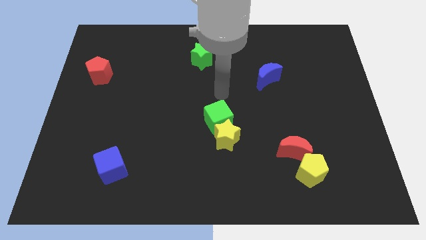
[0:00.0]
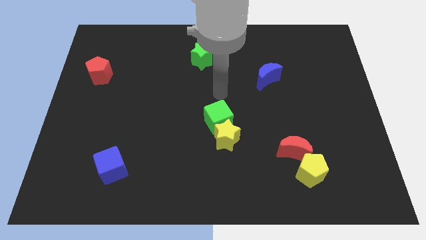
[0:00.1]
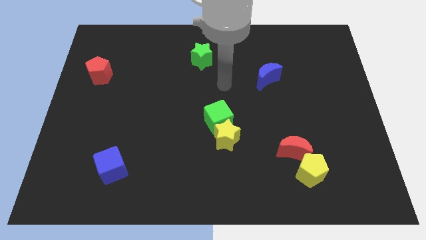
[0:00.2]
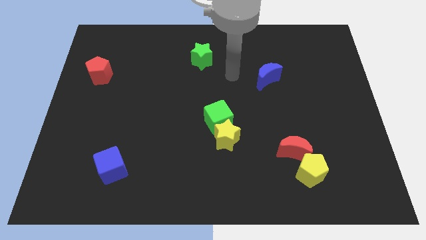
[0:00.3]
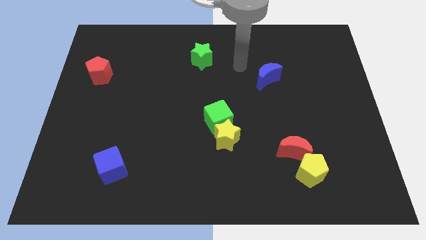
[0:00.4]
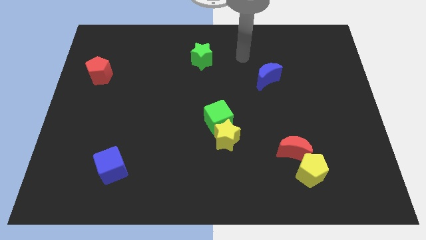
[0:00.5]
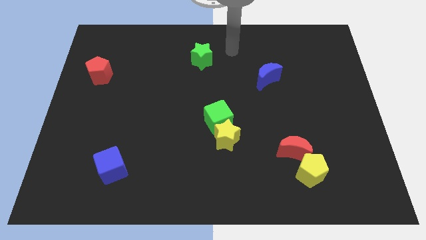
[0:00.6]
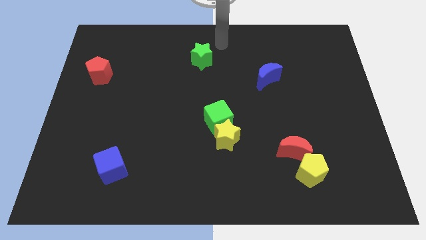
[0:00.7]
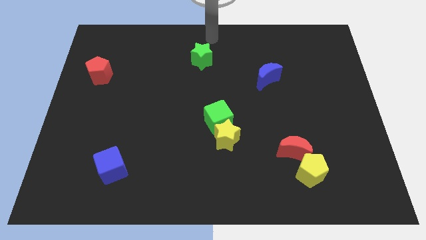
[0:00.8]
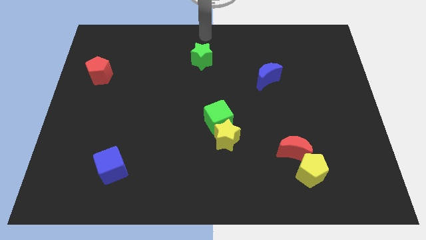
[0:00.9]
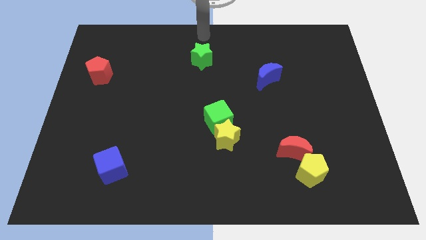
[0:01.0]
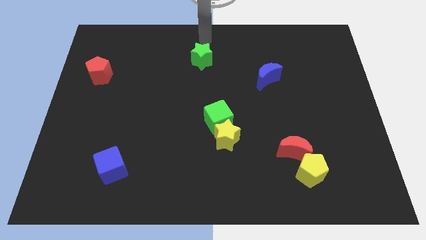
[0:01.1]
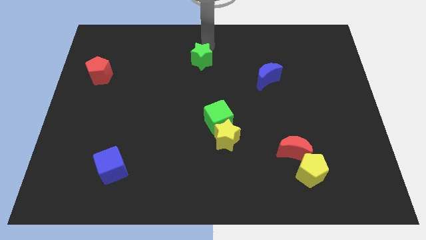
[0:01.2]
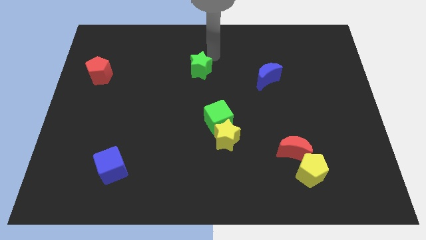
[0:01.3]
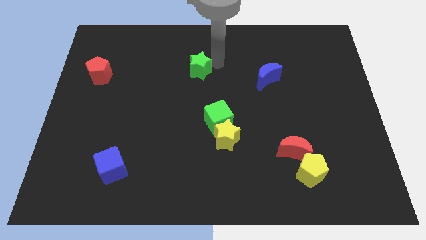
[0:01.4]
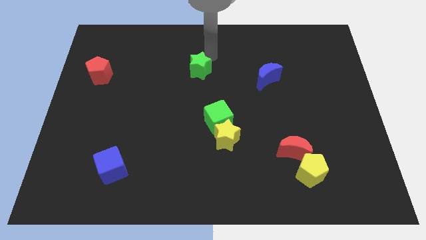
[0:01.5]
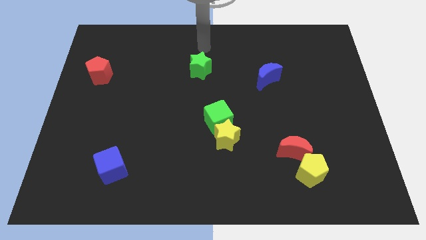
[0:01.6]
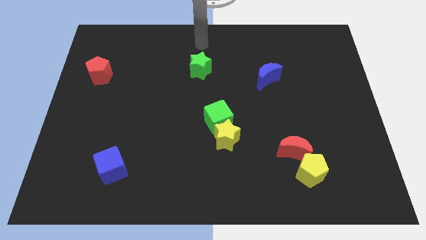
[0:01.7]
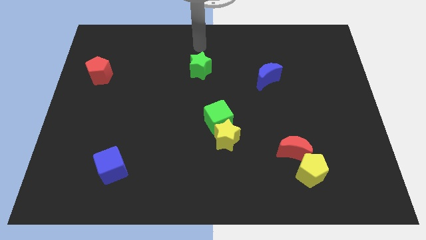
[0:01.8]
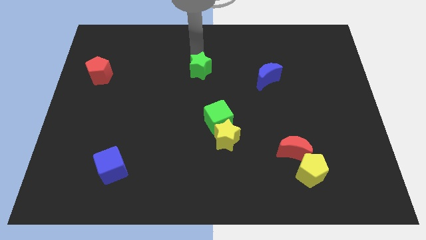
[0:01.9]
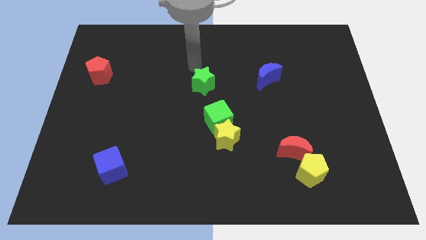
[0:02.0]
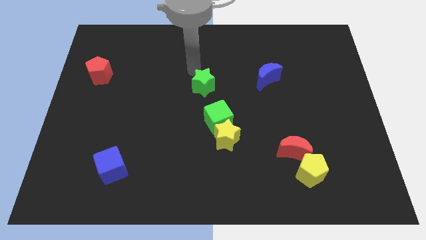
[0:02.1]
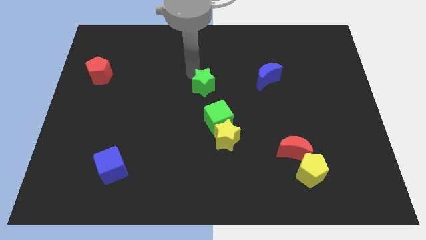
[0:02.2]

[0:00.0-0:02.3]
push the green star towards the green cube

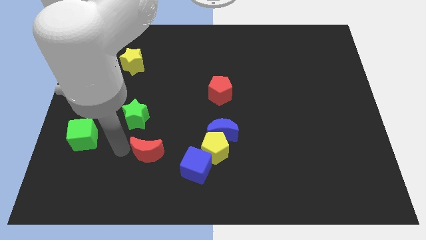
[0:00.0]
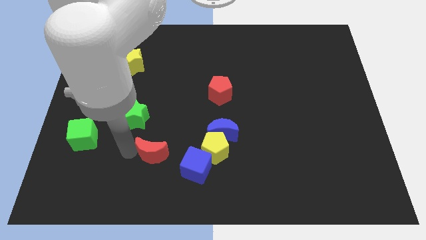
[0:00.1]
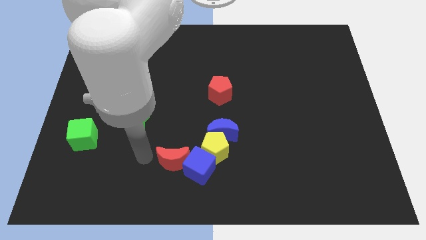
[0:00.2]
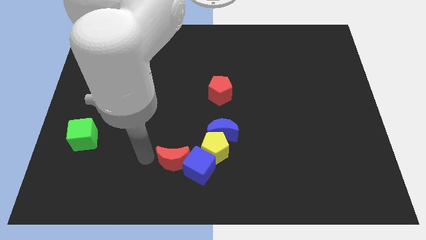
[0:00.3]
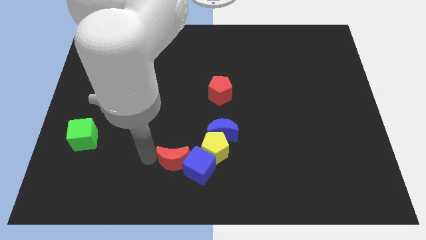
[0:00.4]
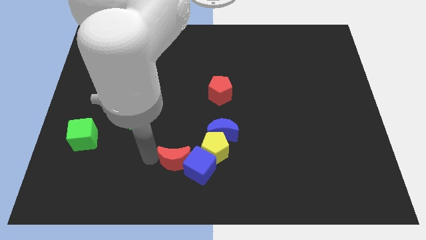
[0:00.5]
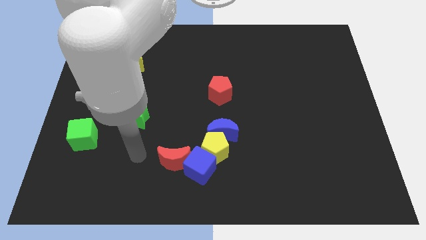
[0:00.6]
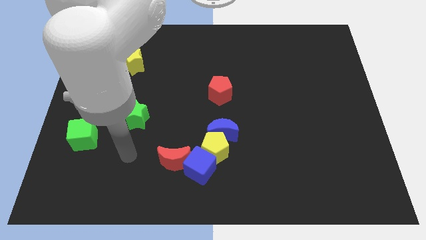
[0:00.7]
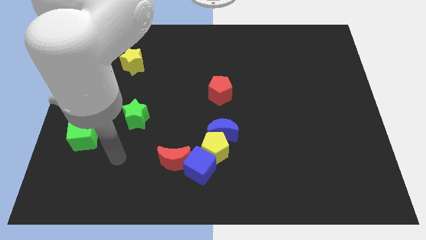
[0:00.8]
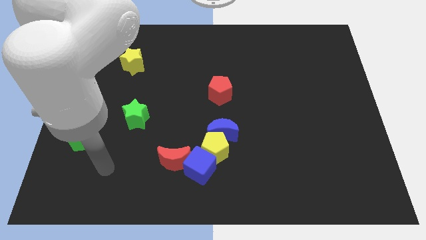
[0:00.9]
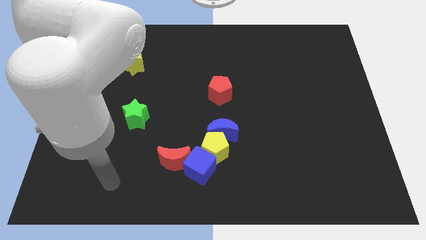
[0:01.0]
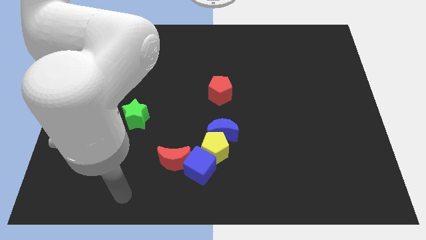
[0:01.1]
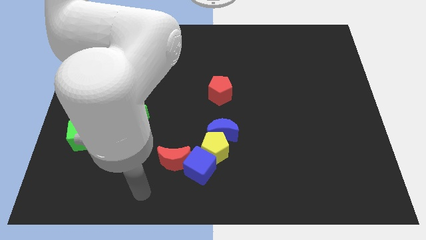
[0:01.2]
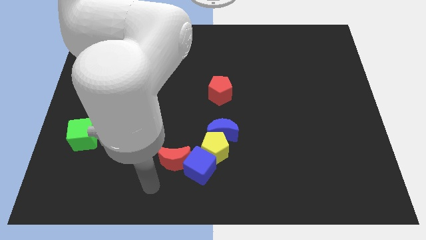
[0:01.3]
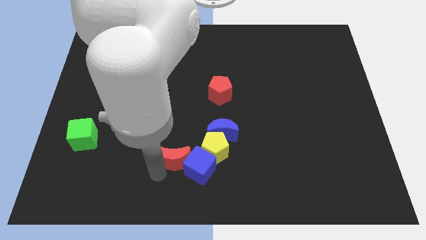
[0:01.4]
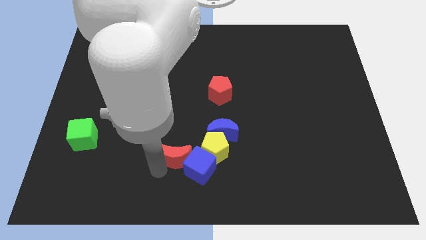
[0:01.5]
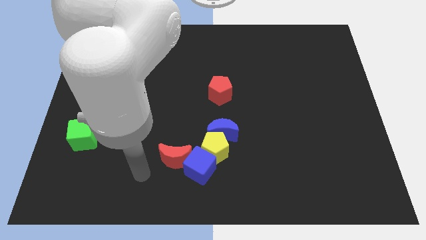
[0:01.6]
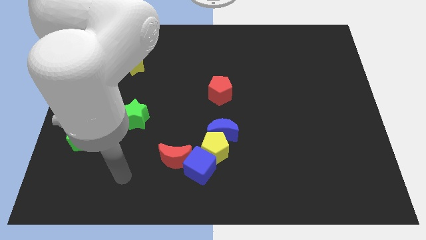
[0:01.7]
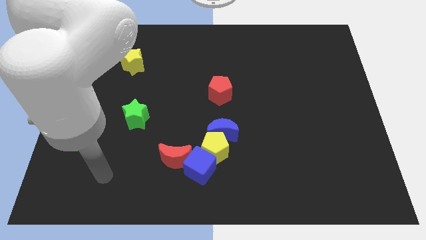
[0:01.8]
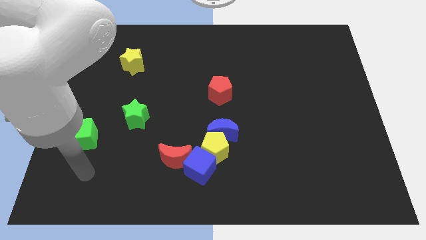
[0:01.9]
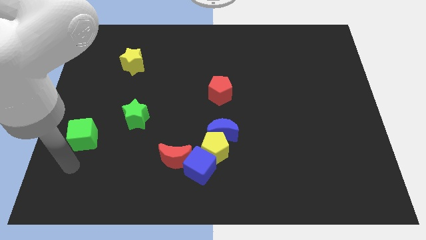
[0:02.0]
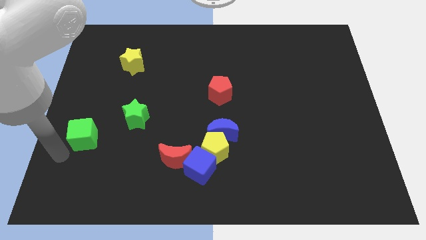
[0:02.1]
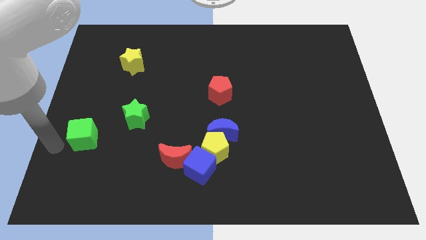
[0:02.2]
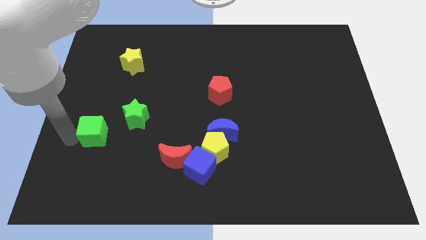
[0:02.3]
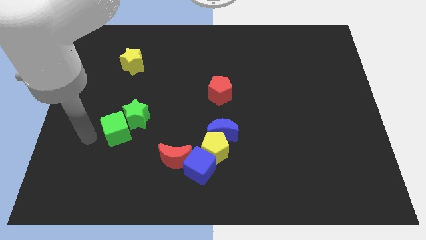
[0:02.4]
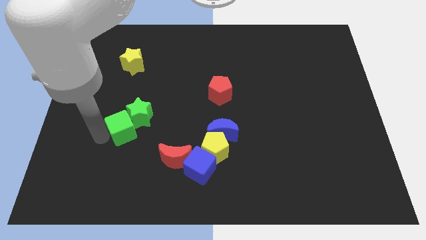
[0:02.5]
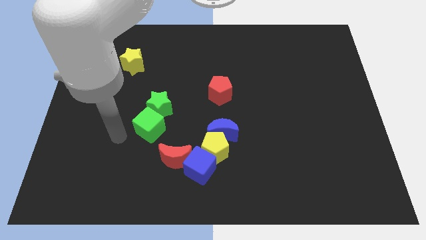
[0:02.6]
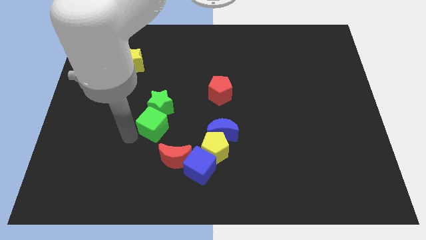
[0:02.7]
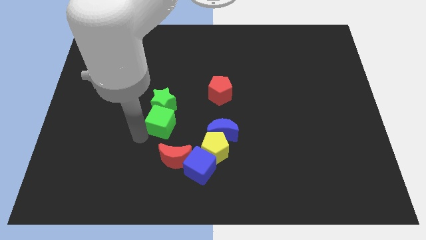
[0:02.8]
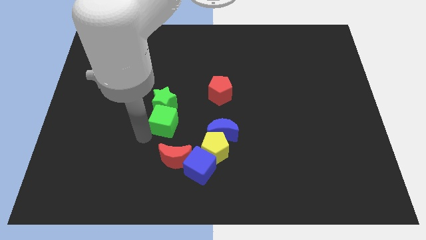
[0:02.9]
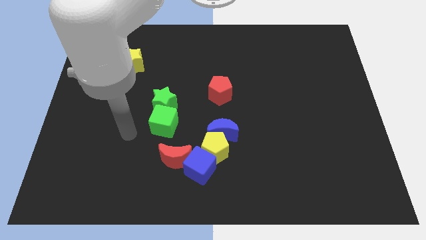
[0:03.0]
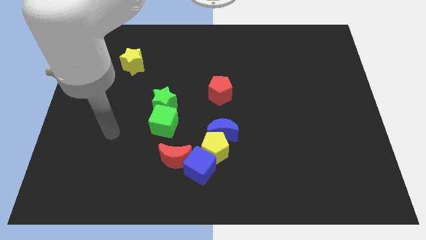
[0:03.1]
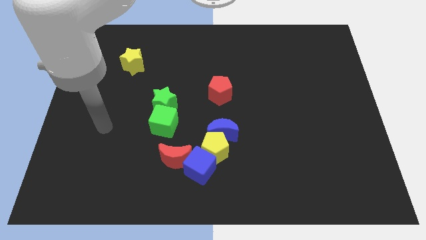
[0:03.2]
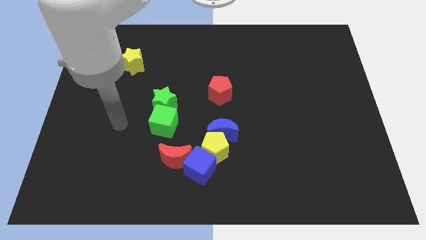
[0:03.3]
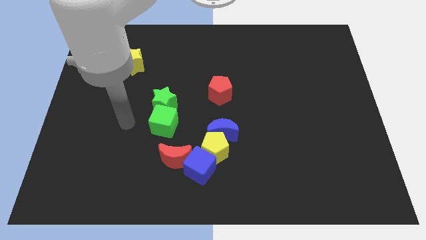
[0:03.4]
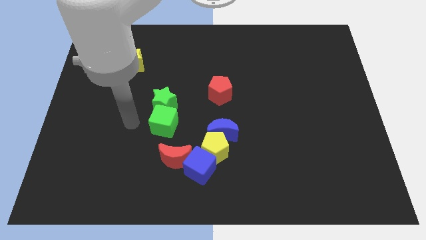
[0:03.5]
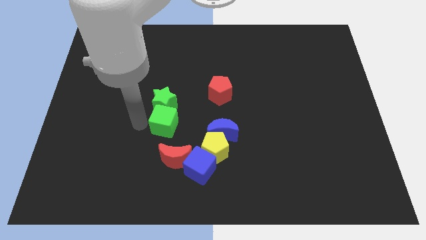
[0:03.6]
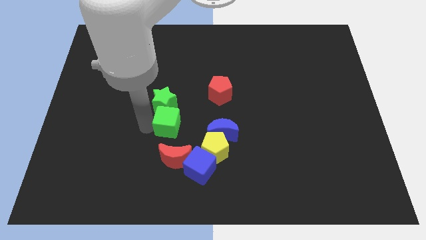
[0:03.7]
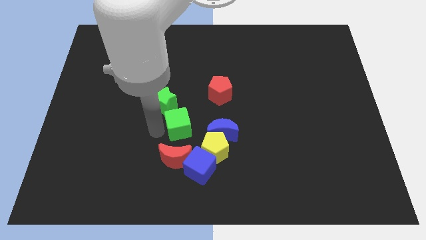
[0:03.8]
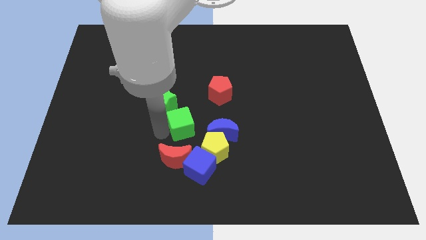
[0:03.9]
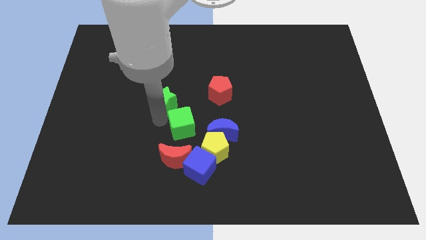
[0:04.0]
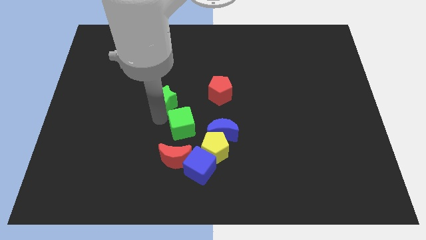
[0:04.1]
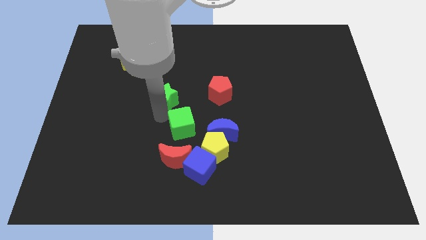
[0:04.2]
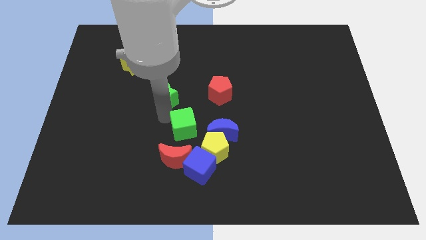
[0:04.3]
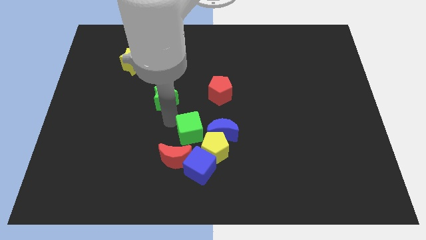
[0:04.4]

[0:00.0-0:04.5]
move the green cube below to the green star

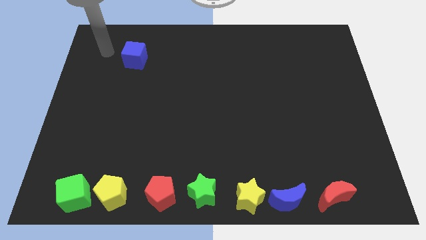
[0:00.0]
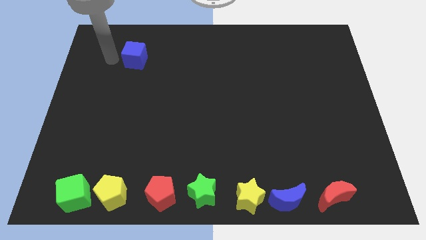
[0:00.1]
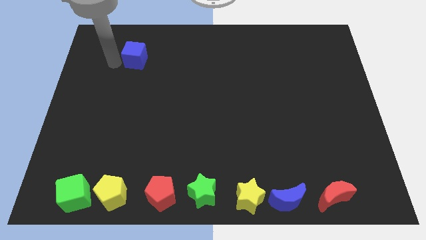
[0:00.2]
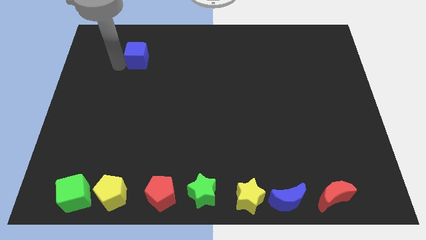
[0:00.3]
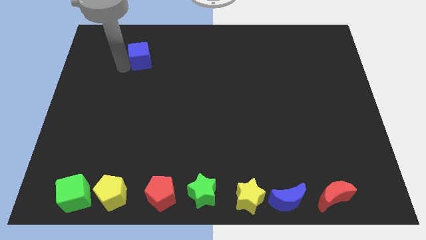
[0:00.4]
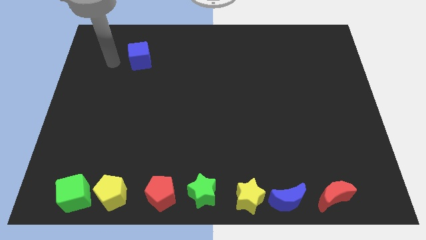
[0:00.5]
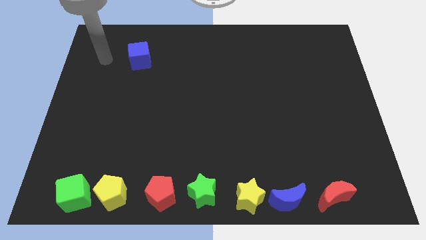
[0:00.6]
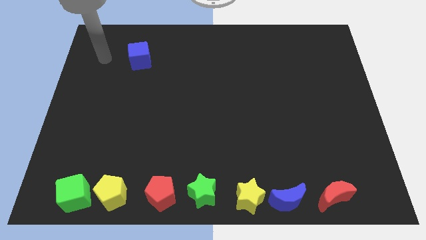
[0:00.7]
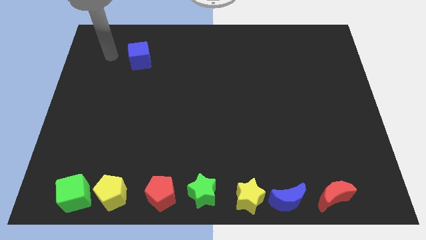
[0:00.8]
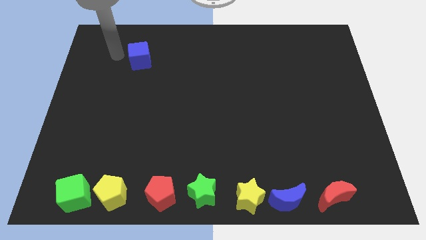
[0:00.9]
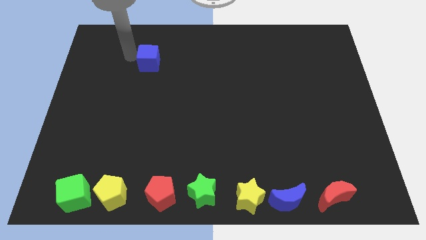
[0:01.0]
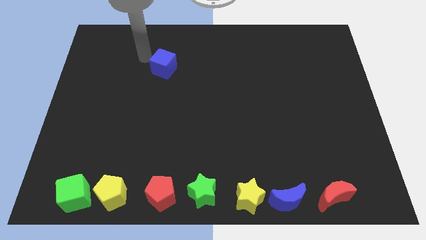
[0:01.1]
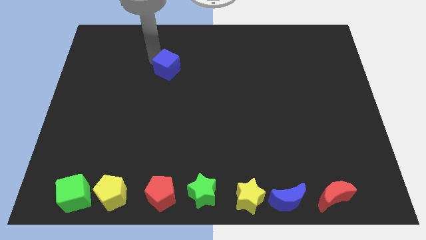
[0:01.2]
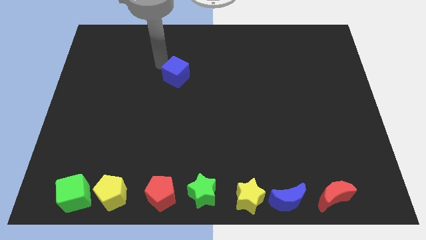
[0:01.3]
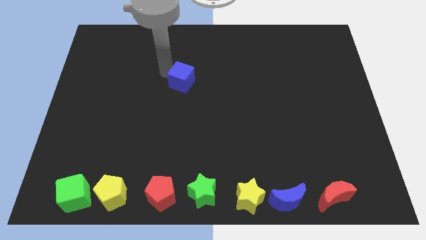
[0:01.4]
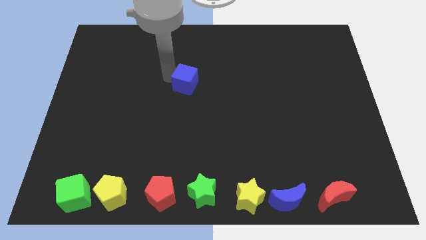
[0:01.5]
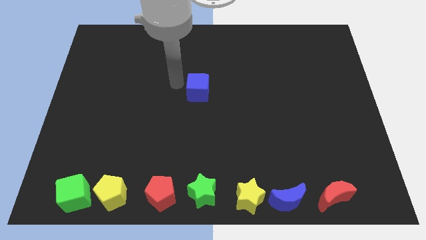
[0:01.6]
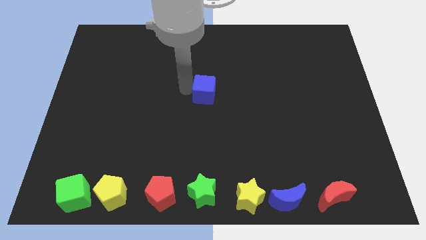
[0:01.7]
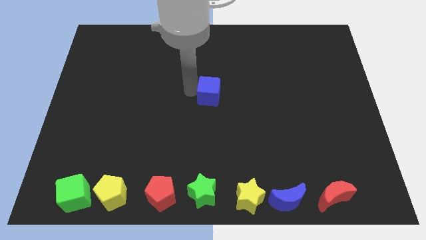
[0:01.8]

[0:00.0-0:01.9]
place the blue cube at center of the board

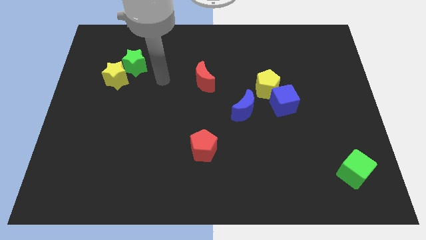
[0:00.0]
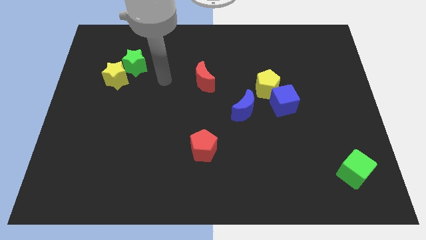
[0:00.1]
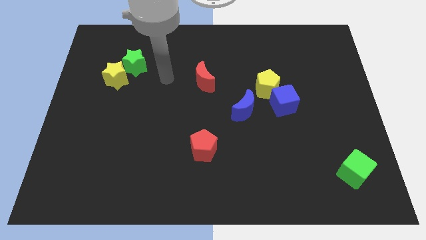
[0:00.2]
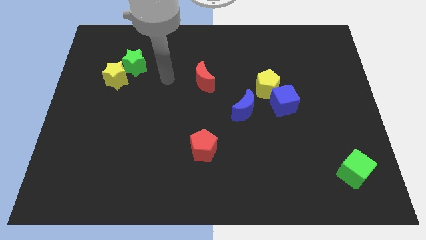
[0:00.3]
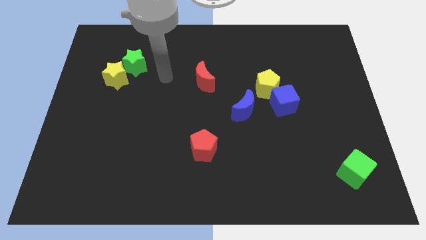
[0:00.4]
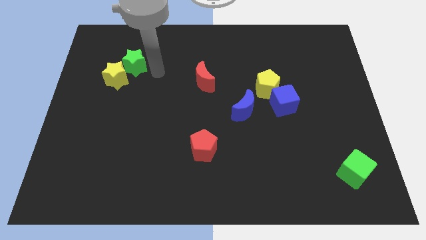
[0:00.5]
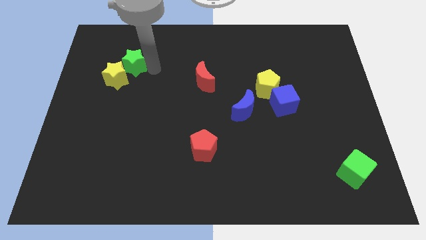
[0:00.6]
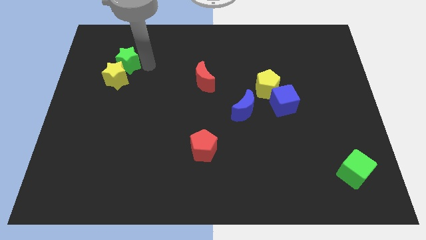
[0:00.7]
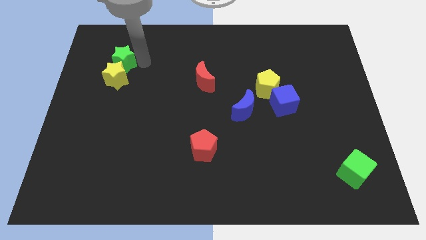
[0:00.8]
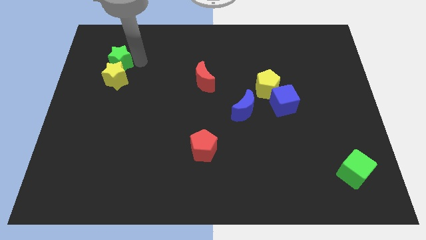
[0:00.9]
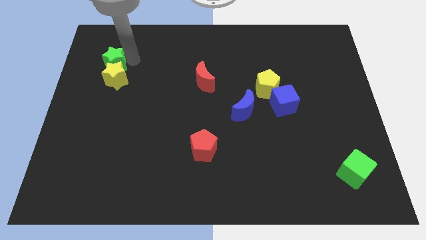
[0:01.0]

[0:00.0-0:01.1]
slide green star on top of yellow star
